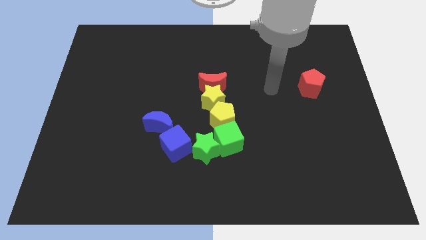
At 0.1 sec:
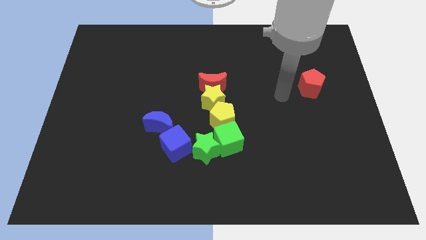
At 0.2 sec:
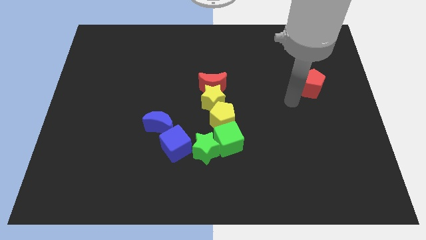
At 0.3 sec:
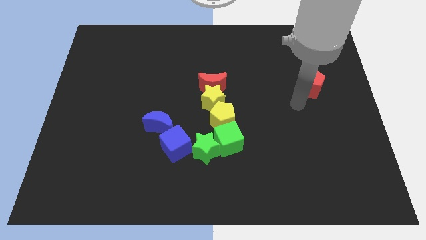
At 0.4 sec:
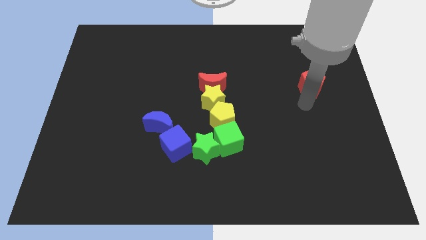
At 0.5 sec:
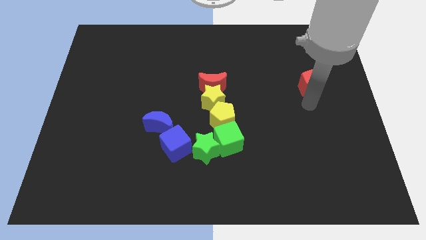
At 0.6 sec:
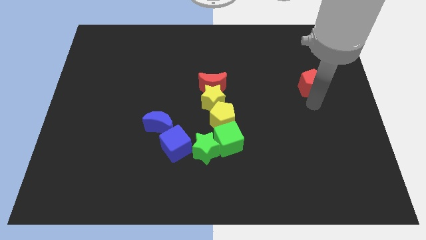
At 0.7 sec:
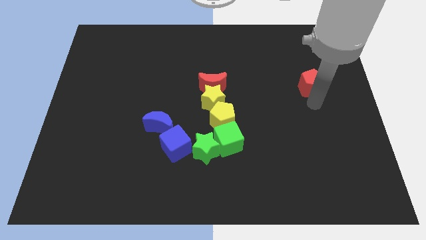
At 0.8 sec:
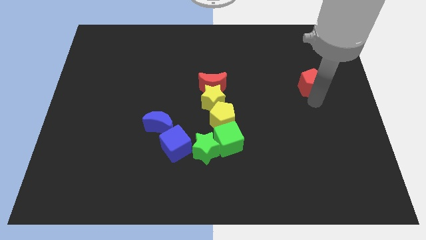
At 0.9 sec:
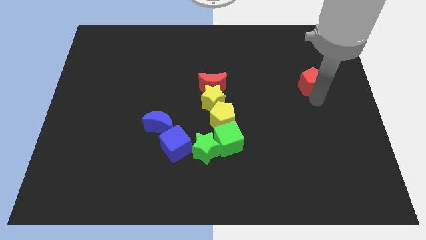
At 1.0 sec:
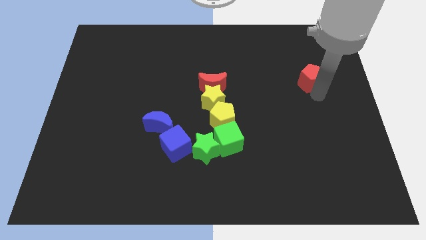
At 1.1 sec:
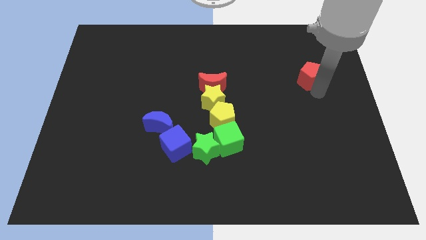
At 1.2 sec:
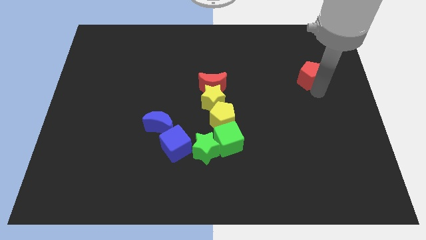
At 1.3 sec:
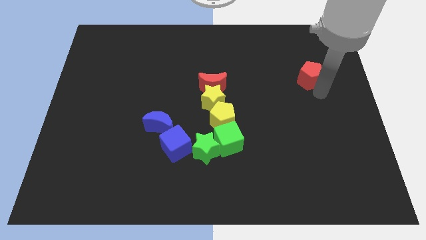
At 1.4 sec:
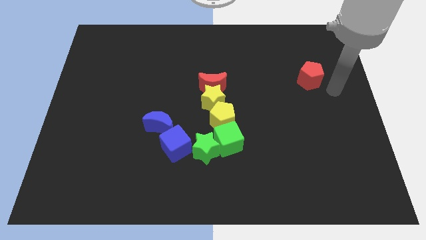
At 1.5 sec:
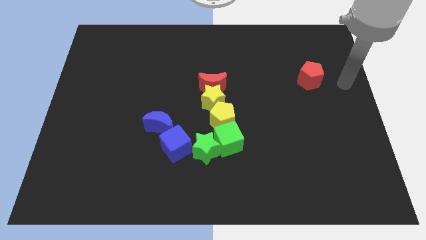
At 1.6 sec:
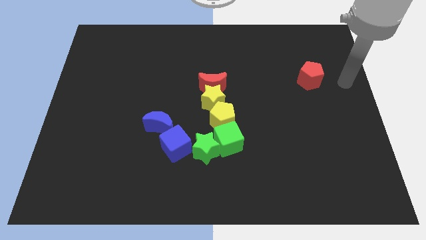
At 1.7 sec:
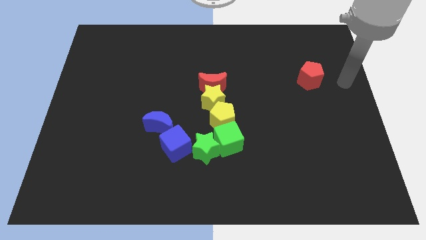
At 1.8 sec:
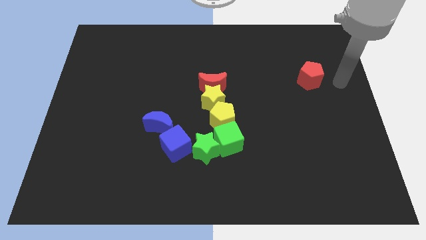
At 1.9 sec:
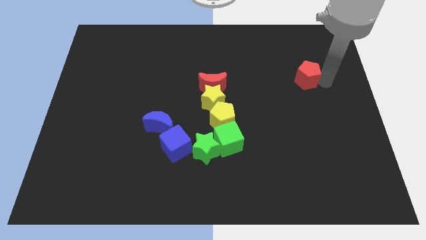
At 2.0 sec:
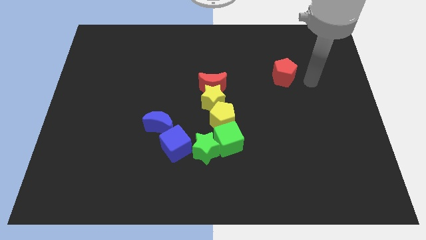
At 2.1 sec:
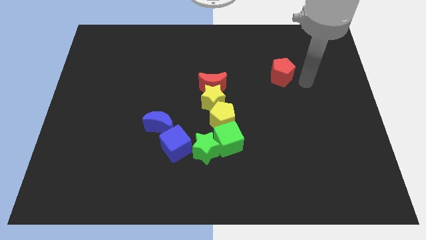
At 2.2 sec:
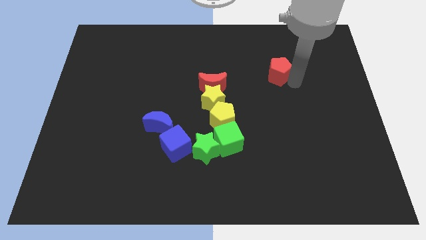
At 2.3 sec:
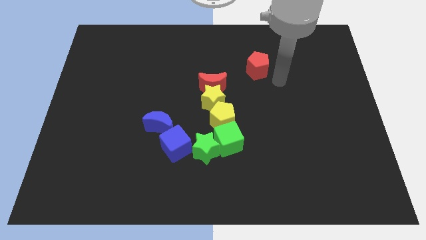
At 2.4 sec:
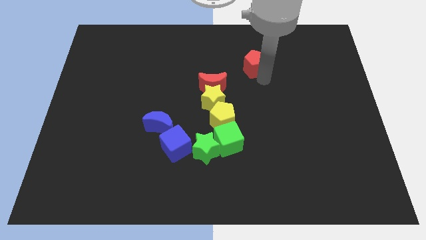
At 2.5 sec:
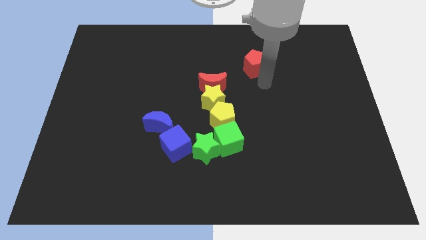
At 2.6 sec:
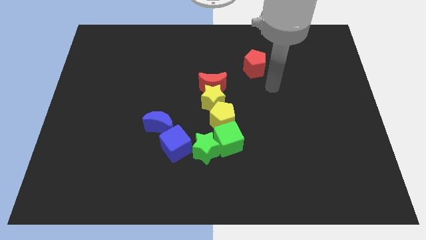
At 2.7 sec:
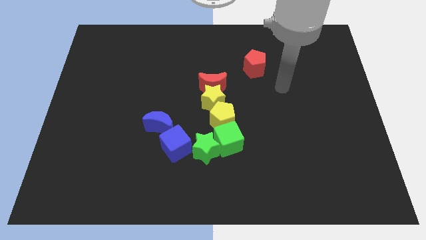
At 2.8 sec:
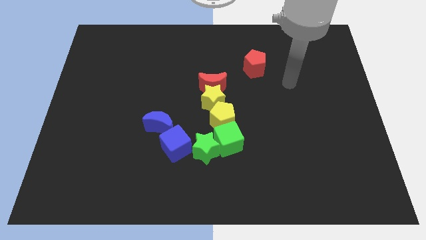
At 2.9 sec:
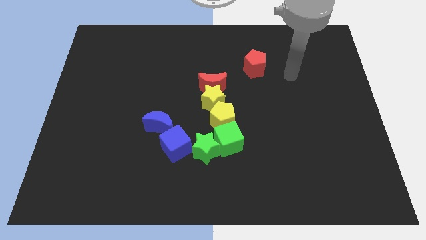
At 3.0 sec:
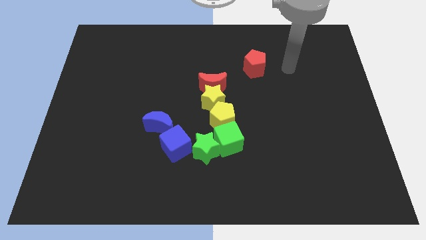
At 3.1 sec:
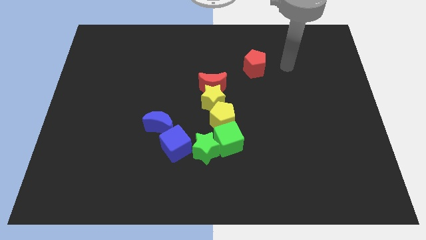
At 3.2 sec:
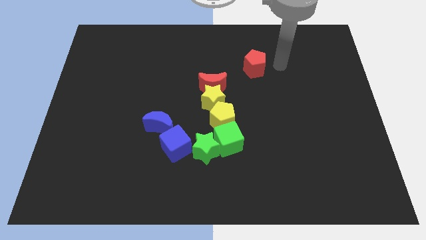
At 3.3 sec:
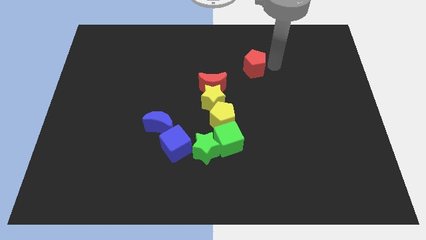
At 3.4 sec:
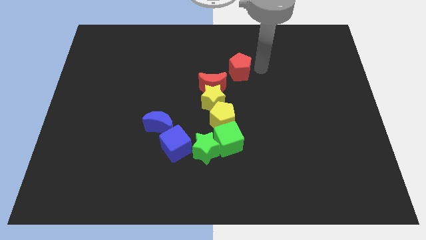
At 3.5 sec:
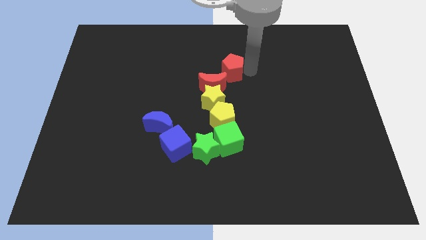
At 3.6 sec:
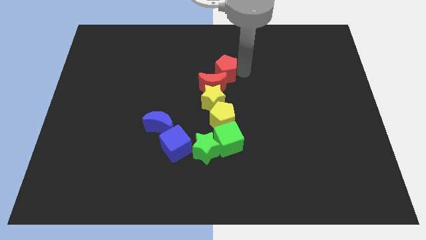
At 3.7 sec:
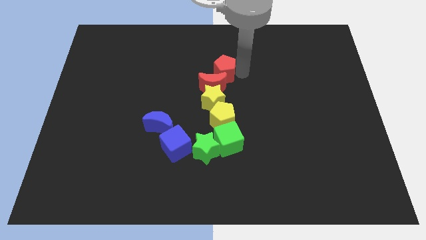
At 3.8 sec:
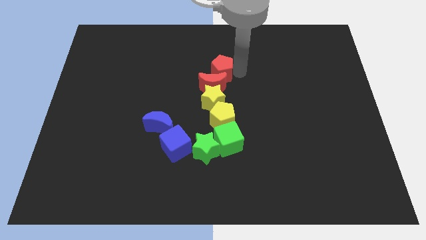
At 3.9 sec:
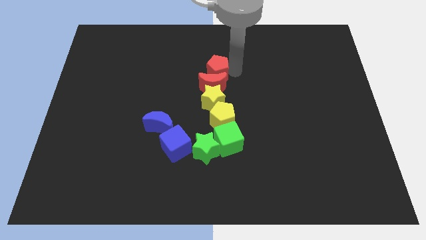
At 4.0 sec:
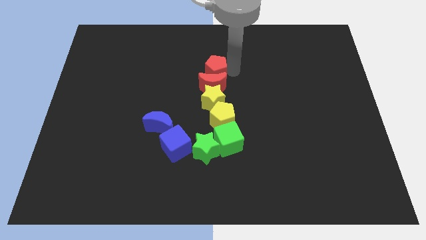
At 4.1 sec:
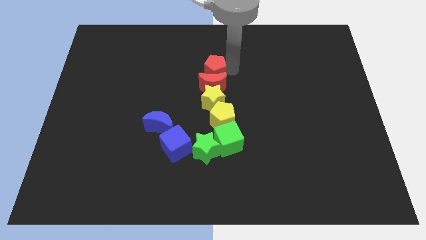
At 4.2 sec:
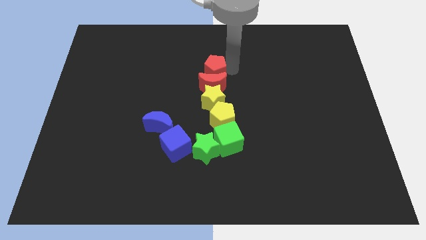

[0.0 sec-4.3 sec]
move the red pentagon above the red crescent

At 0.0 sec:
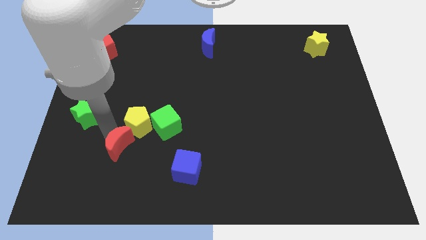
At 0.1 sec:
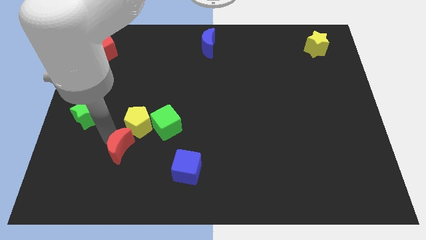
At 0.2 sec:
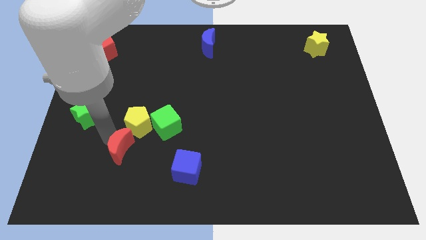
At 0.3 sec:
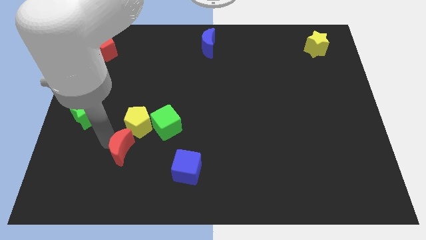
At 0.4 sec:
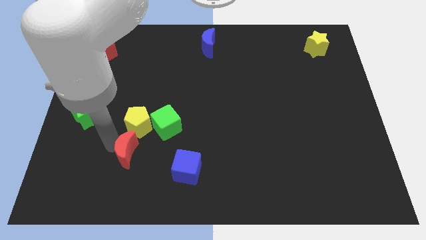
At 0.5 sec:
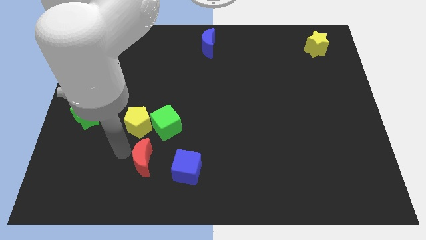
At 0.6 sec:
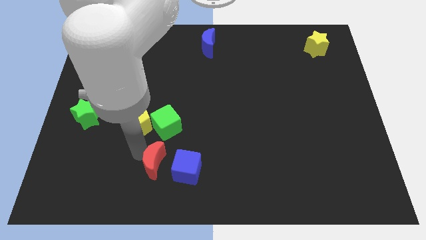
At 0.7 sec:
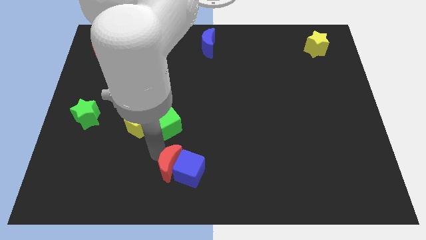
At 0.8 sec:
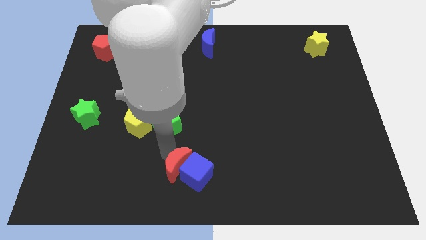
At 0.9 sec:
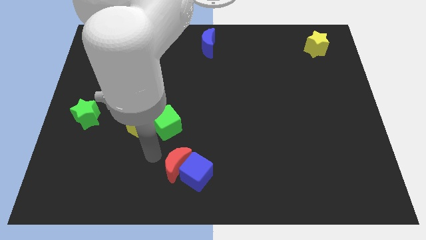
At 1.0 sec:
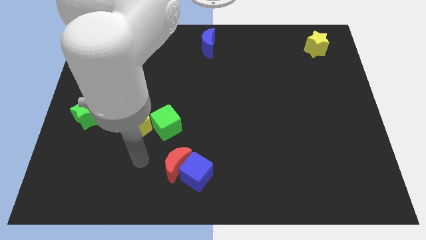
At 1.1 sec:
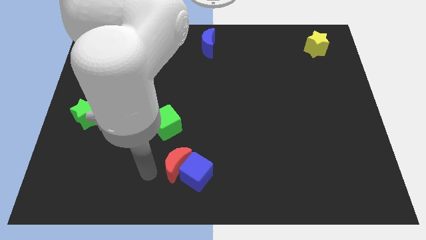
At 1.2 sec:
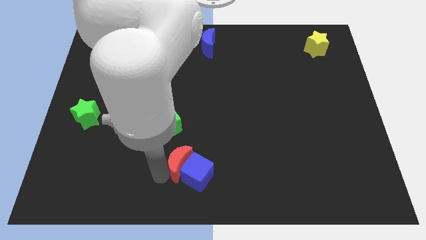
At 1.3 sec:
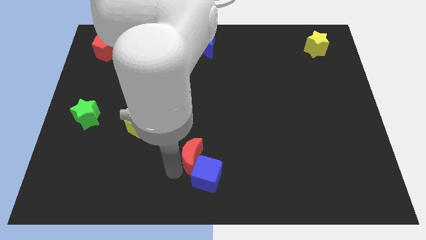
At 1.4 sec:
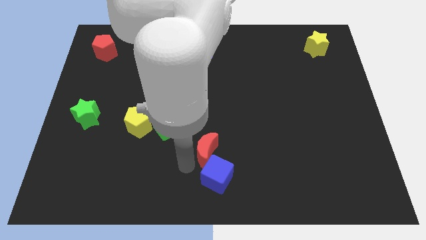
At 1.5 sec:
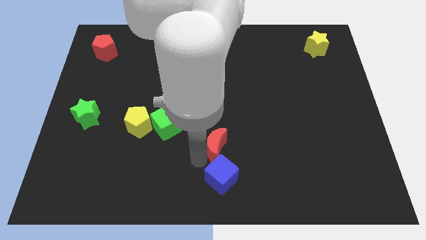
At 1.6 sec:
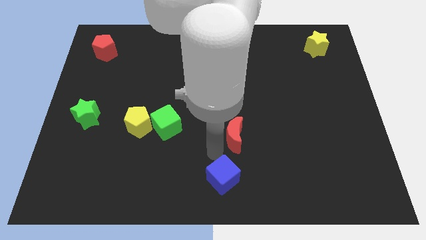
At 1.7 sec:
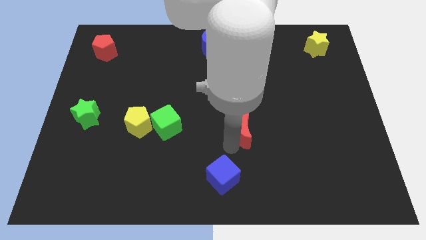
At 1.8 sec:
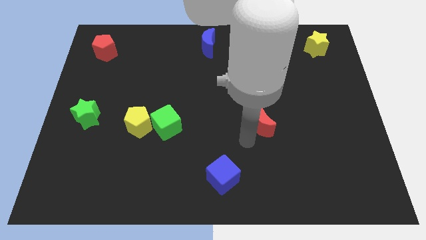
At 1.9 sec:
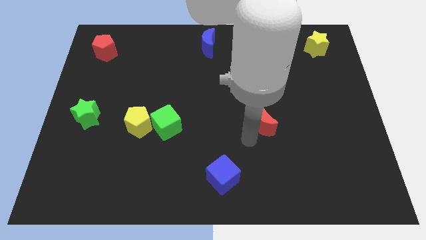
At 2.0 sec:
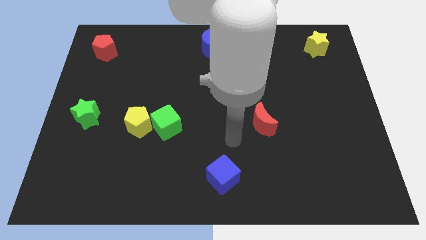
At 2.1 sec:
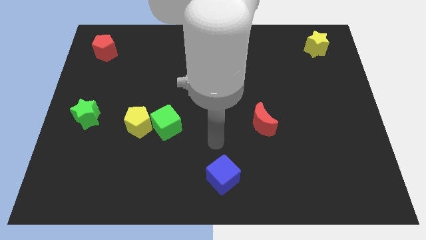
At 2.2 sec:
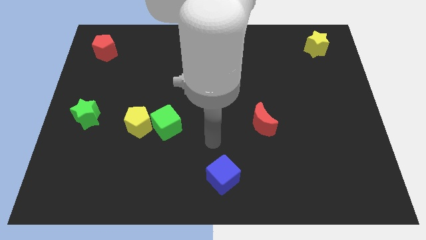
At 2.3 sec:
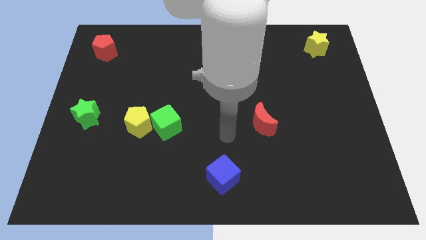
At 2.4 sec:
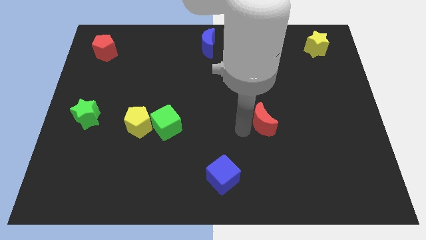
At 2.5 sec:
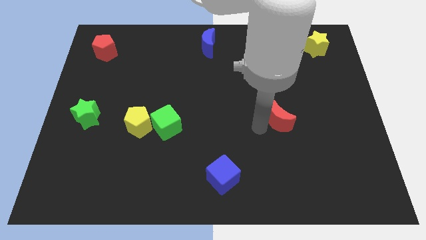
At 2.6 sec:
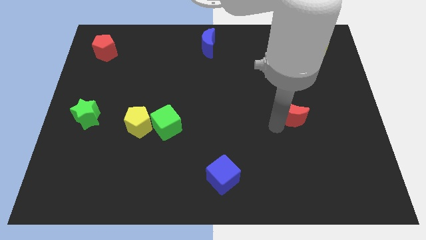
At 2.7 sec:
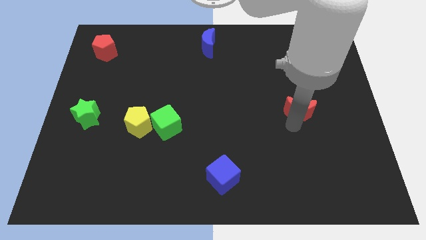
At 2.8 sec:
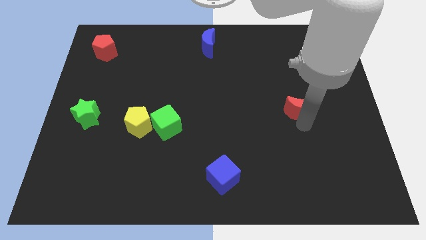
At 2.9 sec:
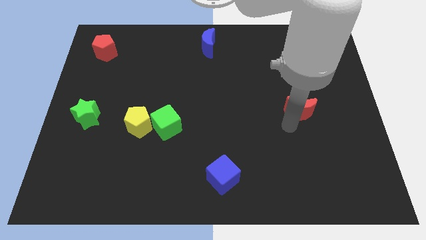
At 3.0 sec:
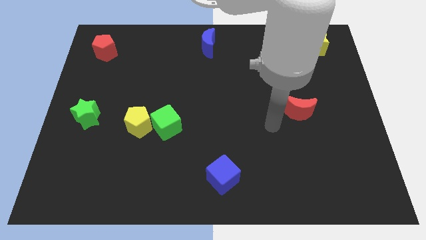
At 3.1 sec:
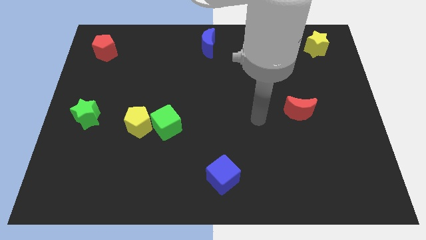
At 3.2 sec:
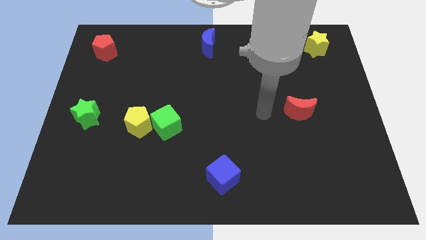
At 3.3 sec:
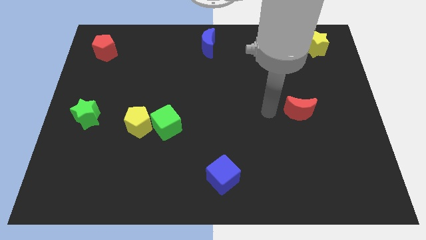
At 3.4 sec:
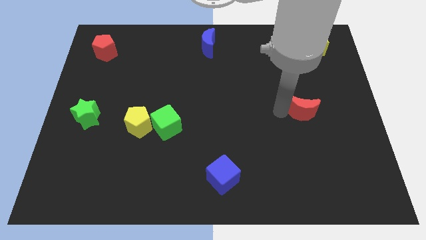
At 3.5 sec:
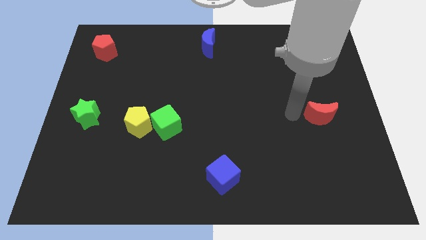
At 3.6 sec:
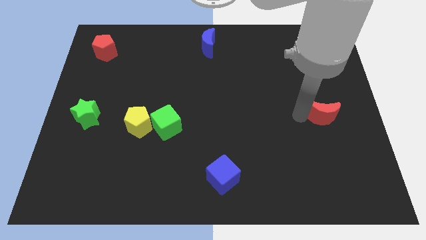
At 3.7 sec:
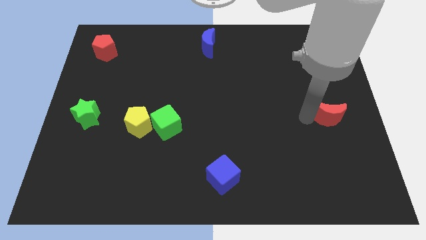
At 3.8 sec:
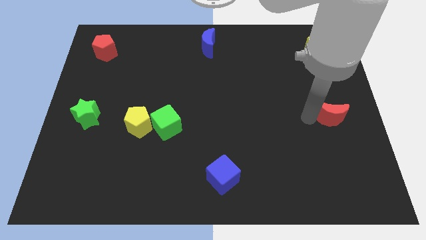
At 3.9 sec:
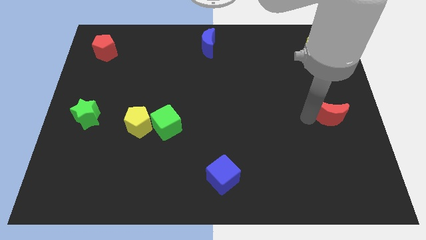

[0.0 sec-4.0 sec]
drag the red moon to the right side of the board

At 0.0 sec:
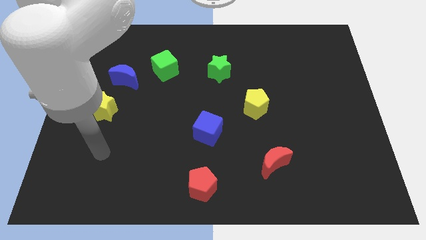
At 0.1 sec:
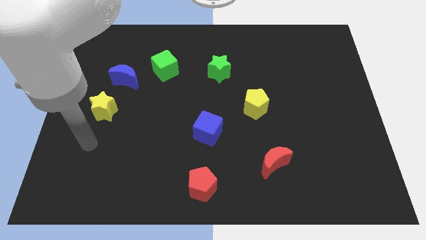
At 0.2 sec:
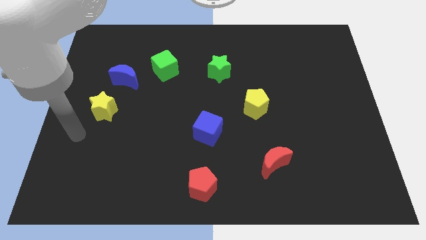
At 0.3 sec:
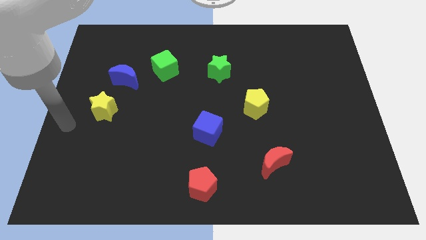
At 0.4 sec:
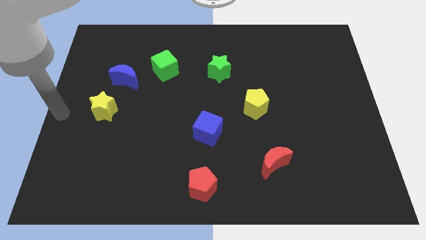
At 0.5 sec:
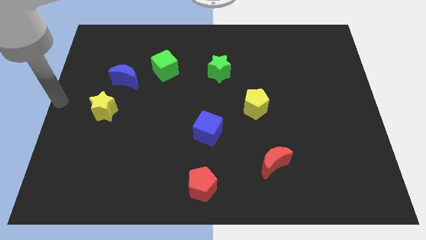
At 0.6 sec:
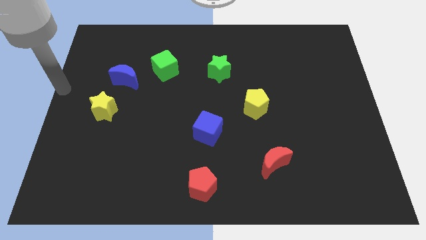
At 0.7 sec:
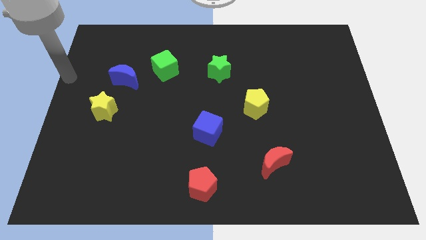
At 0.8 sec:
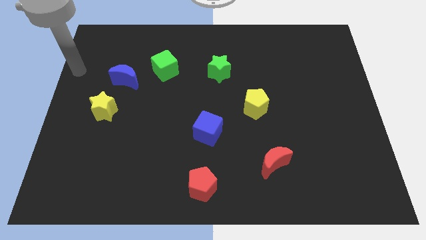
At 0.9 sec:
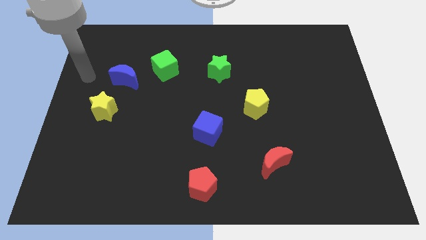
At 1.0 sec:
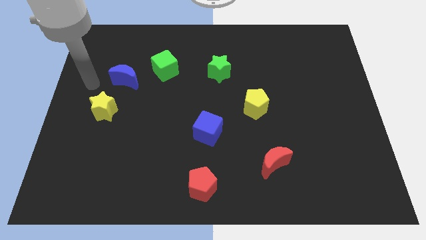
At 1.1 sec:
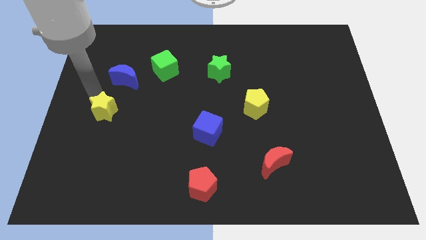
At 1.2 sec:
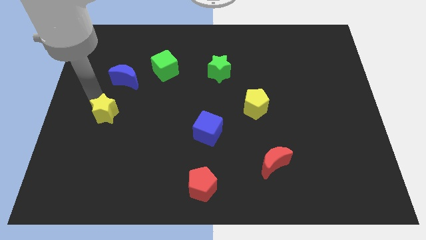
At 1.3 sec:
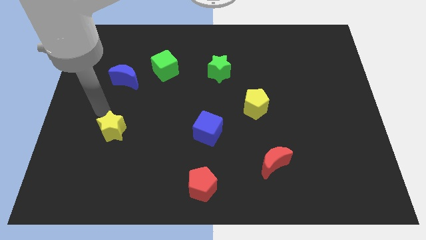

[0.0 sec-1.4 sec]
push the yellow star vertically to the bottom side of the blue crescent
